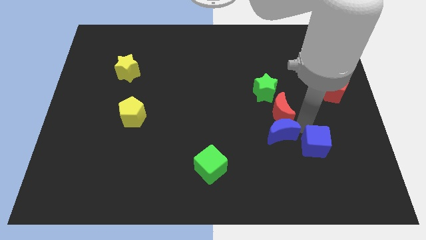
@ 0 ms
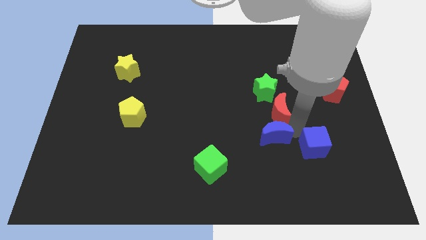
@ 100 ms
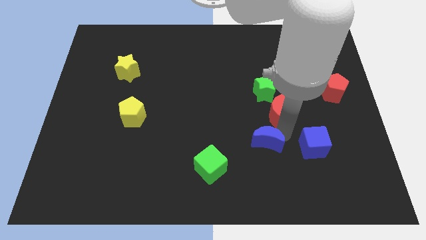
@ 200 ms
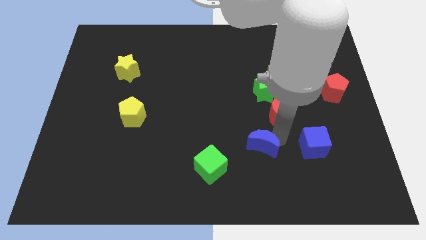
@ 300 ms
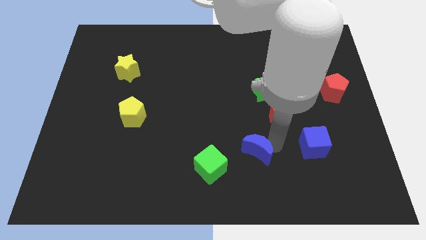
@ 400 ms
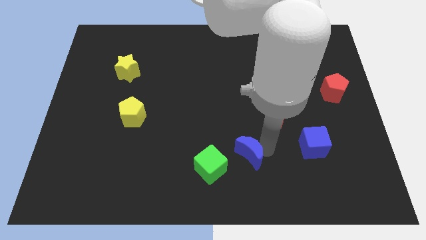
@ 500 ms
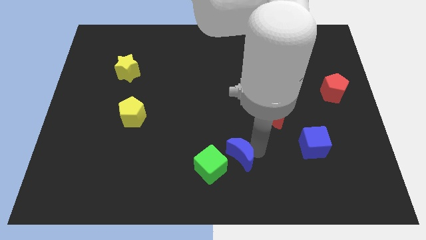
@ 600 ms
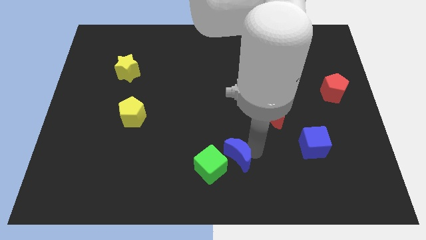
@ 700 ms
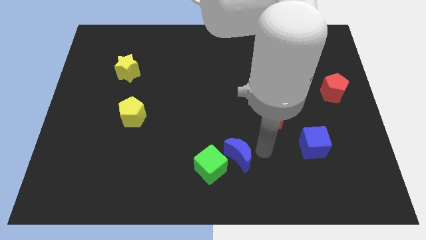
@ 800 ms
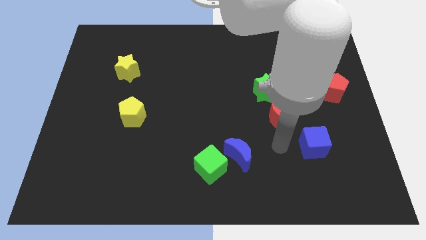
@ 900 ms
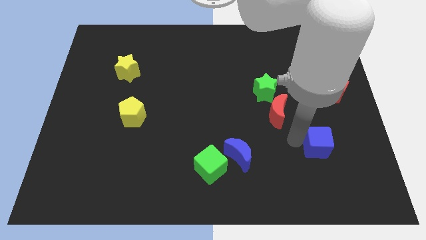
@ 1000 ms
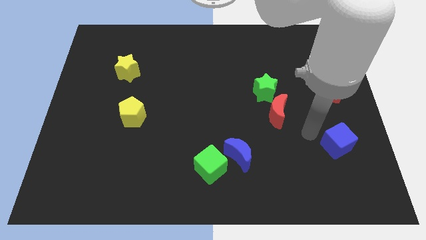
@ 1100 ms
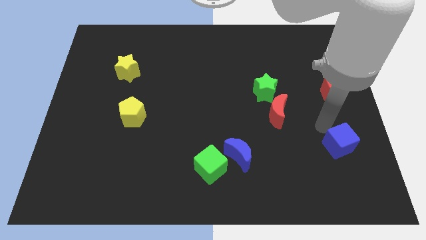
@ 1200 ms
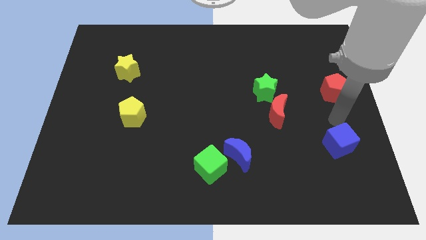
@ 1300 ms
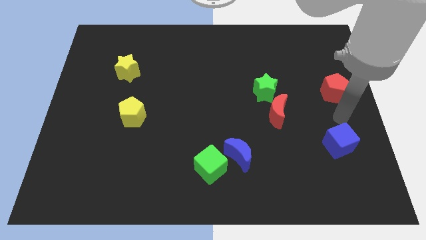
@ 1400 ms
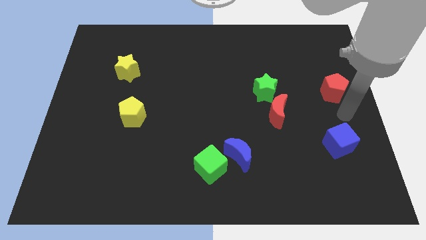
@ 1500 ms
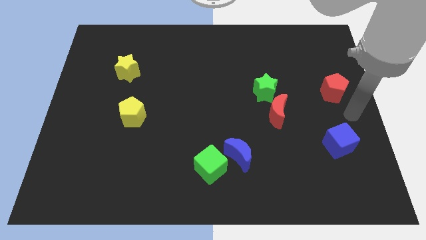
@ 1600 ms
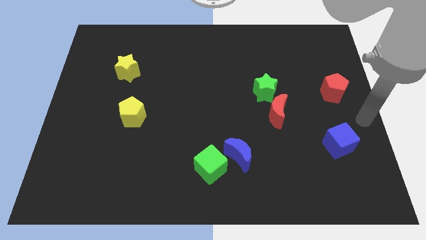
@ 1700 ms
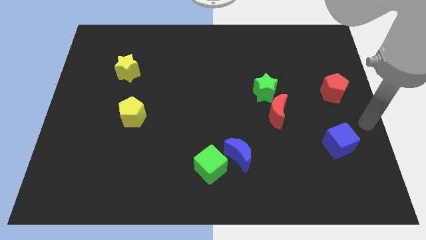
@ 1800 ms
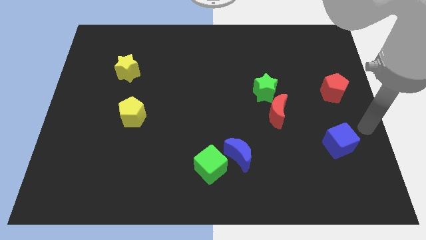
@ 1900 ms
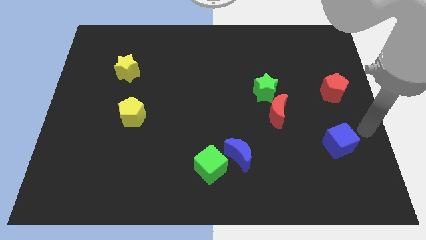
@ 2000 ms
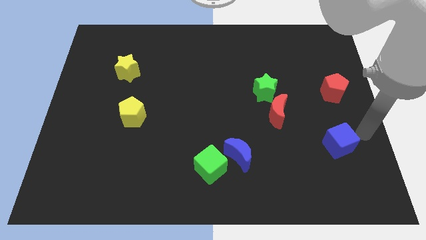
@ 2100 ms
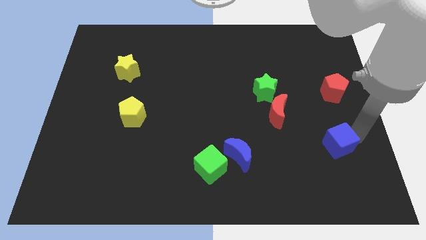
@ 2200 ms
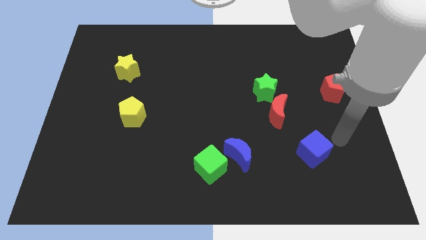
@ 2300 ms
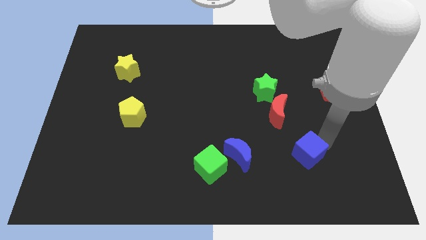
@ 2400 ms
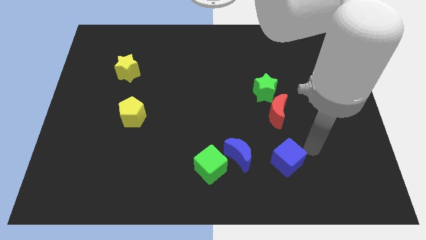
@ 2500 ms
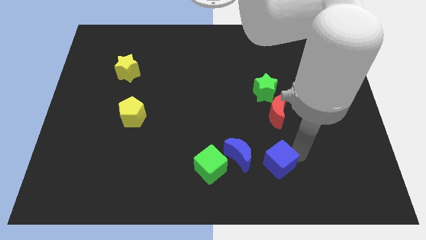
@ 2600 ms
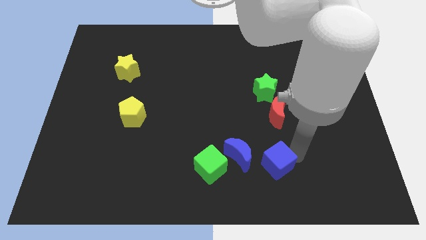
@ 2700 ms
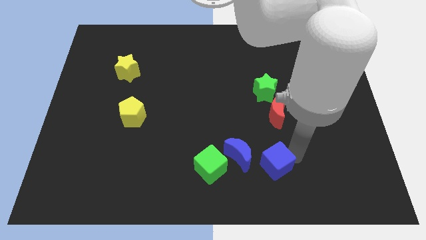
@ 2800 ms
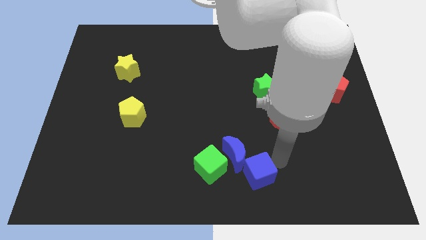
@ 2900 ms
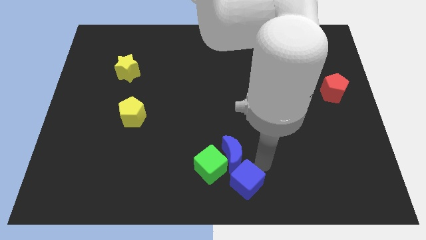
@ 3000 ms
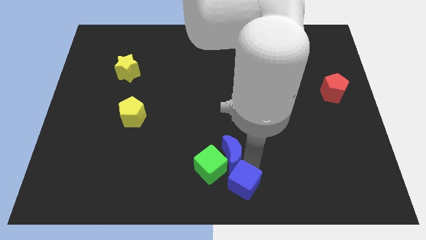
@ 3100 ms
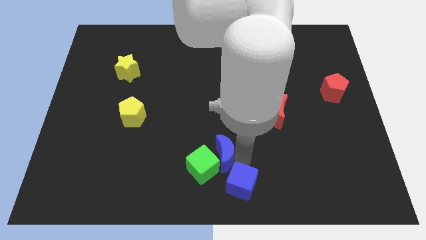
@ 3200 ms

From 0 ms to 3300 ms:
push the blue blocks into the green cube

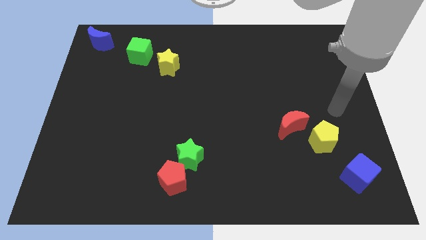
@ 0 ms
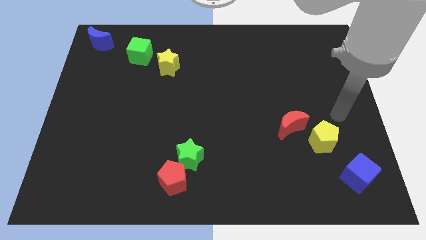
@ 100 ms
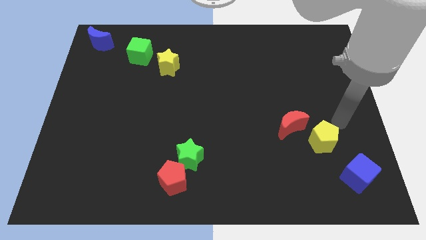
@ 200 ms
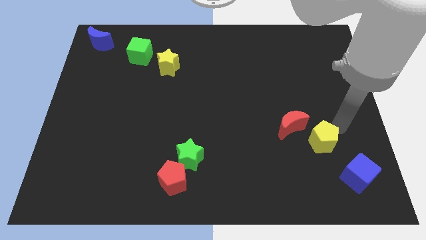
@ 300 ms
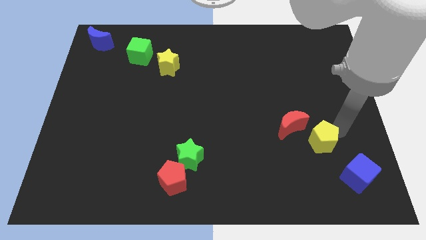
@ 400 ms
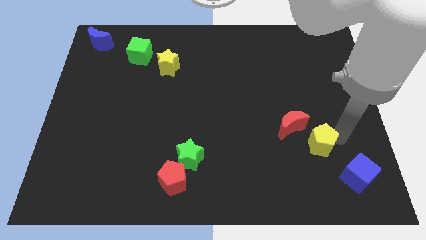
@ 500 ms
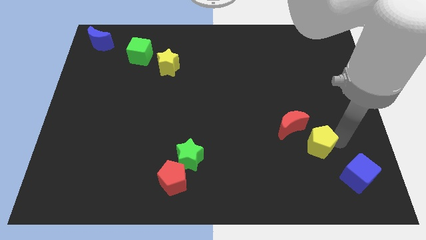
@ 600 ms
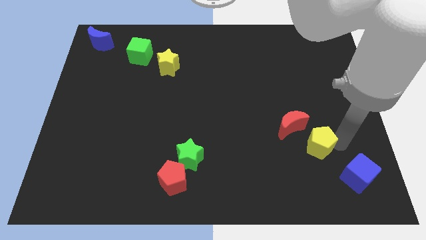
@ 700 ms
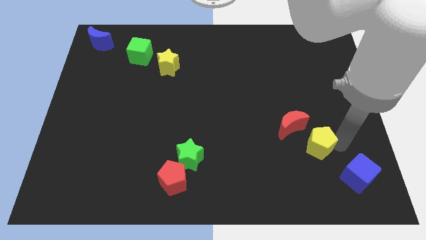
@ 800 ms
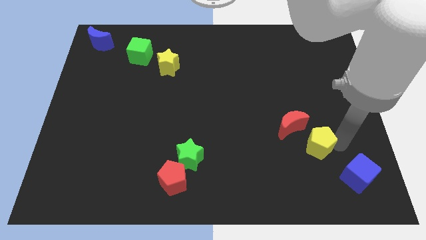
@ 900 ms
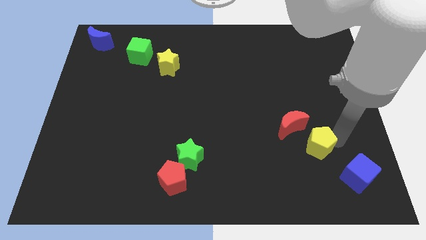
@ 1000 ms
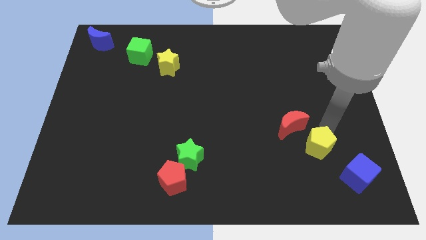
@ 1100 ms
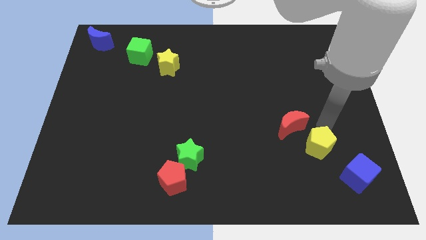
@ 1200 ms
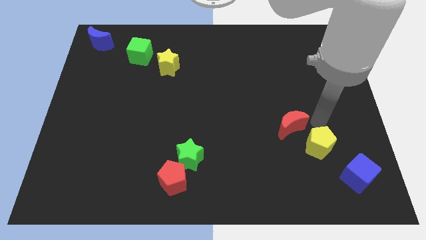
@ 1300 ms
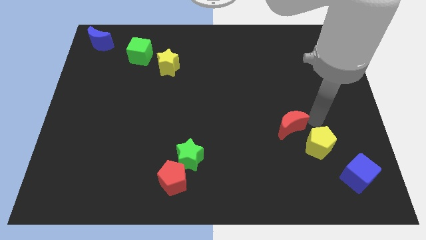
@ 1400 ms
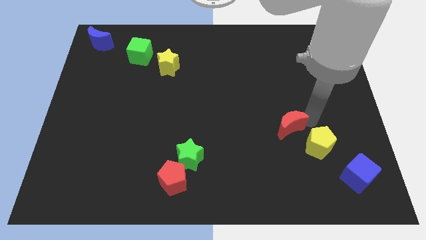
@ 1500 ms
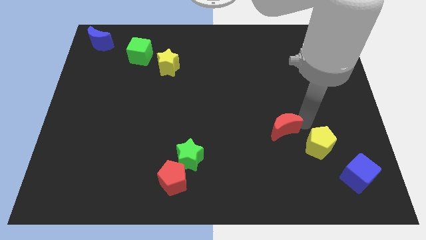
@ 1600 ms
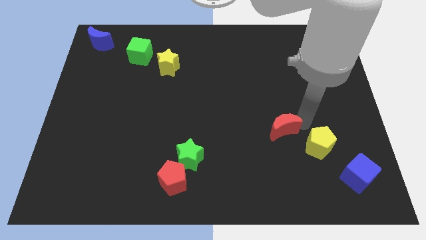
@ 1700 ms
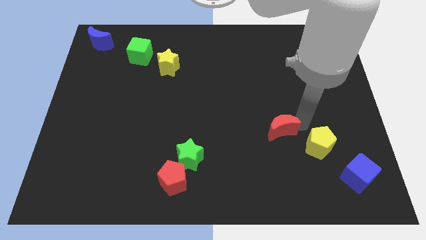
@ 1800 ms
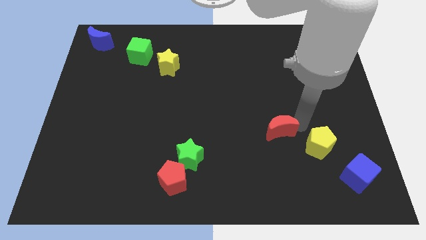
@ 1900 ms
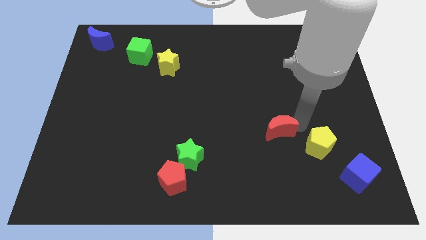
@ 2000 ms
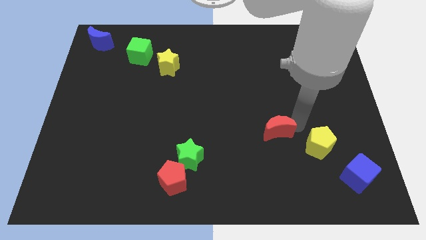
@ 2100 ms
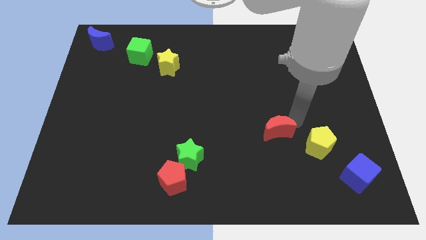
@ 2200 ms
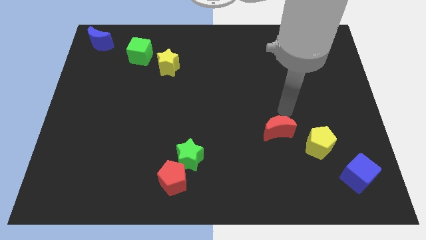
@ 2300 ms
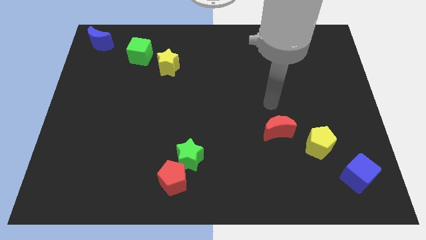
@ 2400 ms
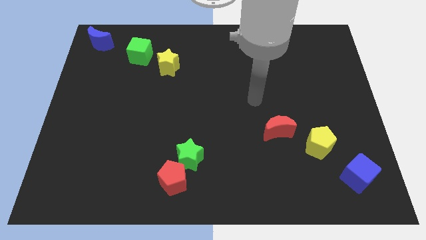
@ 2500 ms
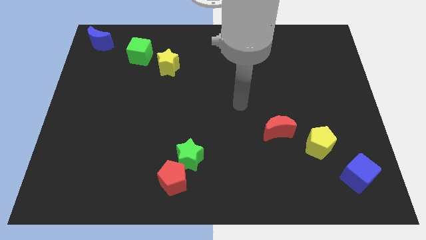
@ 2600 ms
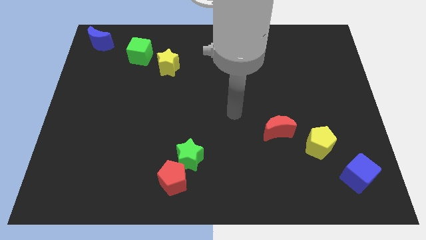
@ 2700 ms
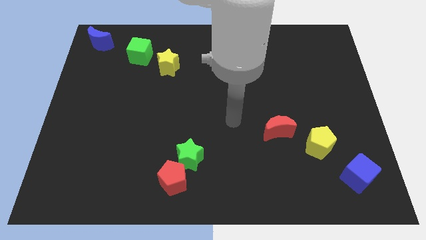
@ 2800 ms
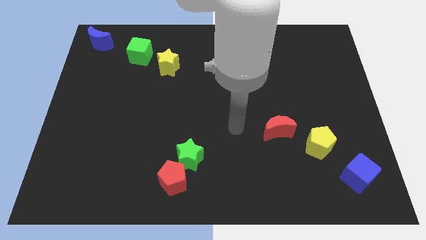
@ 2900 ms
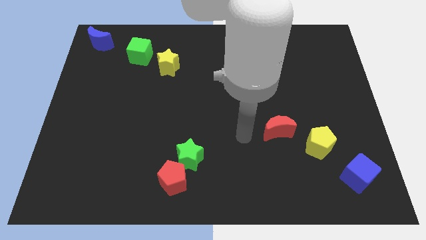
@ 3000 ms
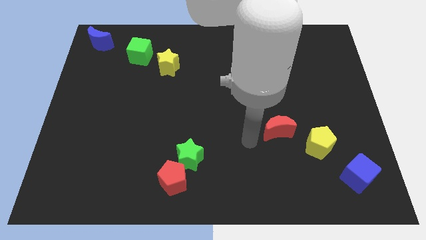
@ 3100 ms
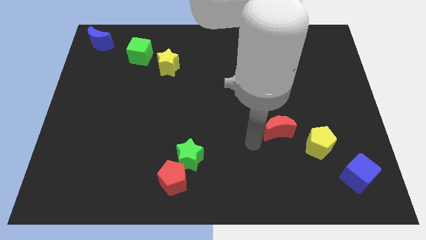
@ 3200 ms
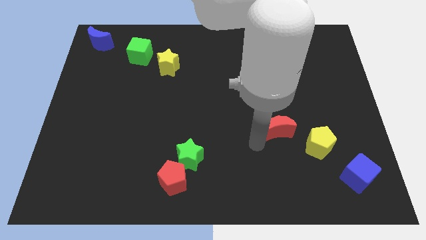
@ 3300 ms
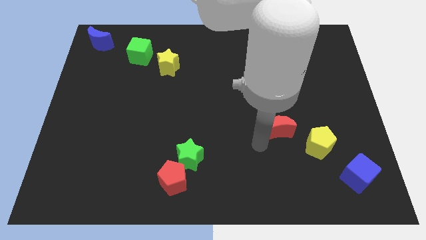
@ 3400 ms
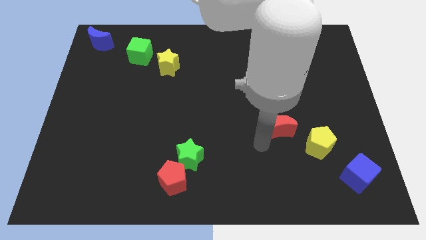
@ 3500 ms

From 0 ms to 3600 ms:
push red moon towards left side of the board

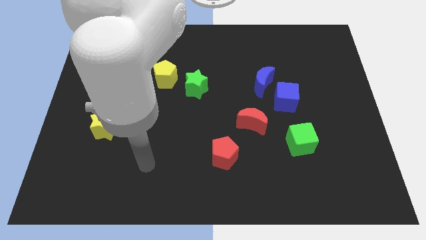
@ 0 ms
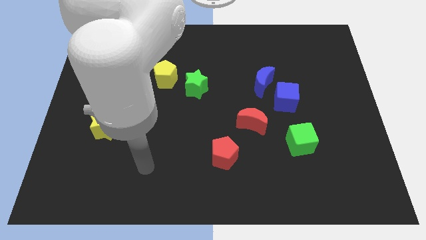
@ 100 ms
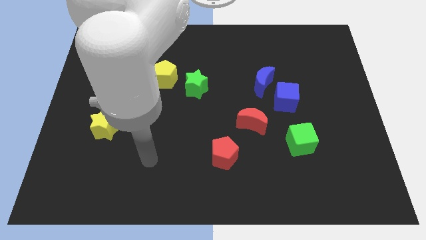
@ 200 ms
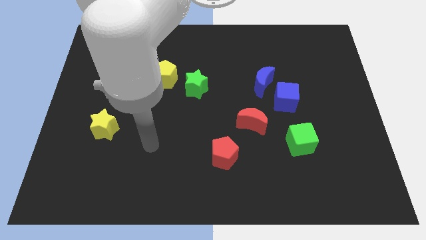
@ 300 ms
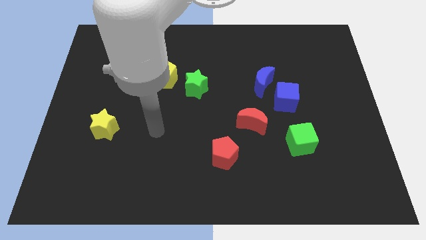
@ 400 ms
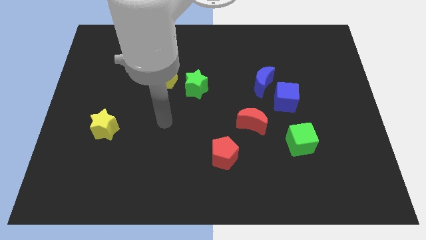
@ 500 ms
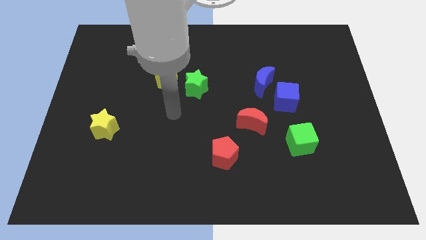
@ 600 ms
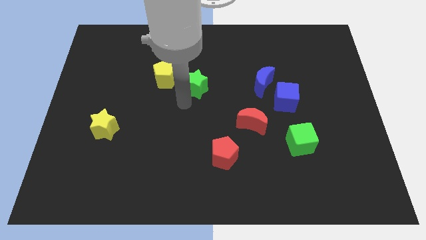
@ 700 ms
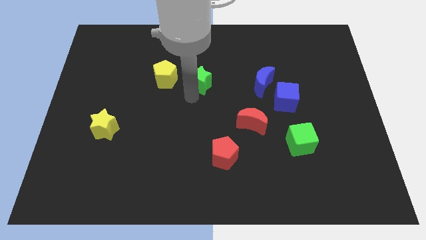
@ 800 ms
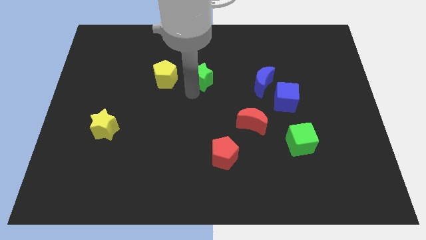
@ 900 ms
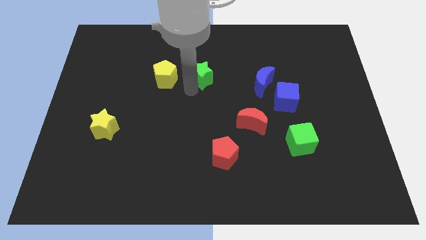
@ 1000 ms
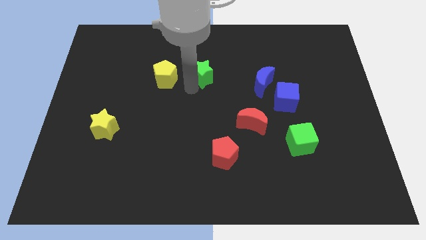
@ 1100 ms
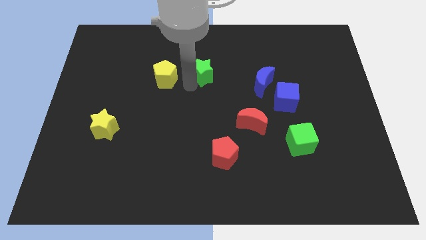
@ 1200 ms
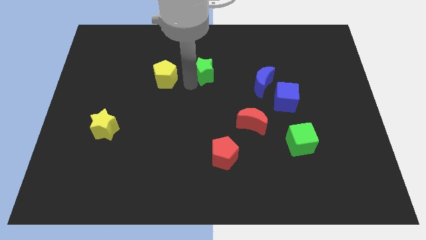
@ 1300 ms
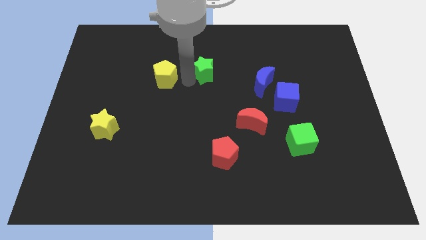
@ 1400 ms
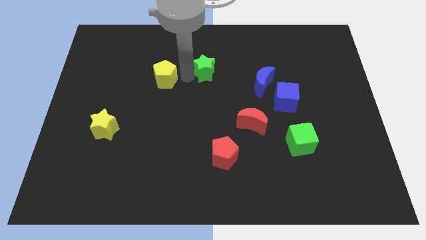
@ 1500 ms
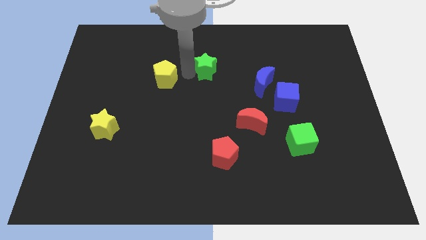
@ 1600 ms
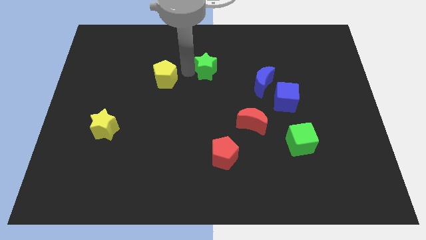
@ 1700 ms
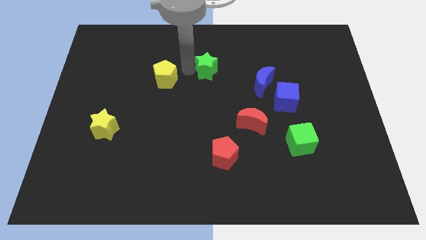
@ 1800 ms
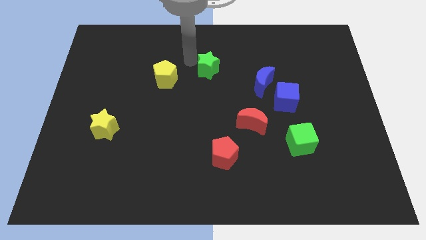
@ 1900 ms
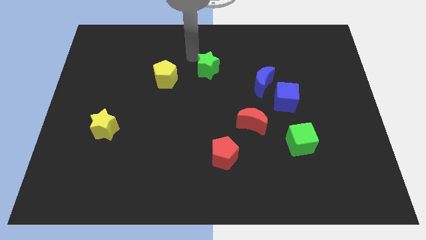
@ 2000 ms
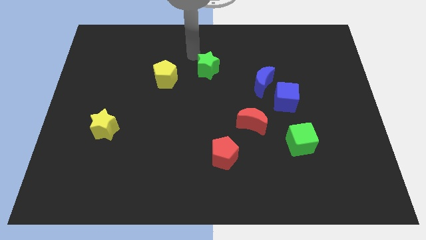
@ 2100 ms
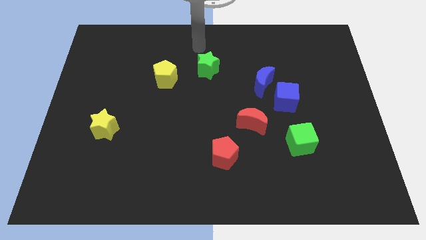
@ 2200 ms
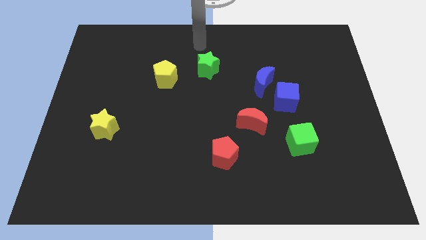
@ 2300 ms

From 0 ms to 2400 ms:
push the green star slightly to the top center of the board
